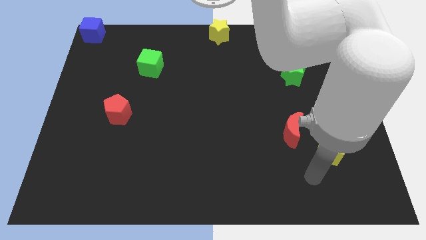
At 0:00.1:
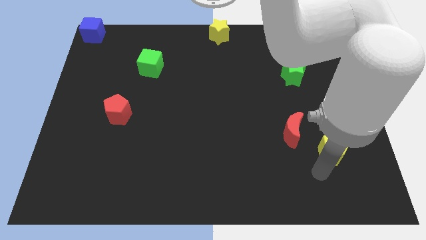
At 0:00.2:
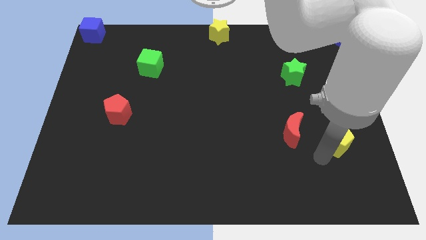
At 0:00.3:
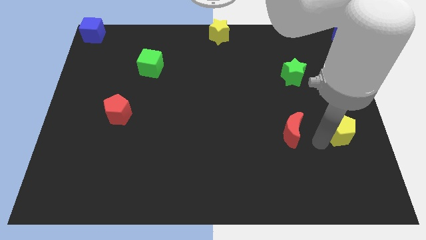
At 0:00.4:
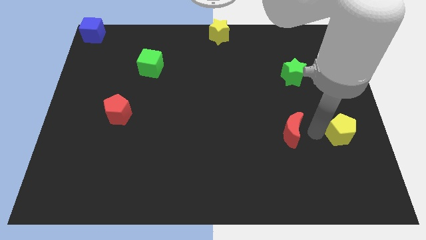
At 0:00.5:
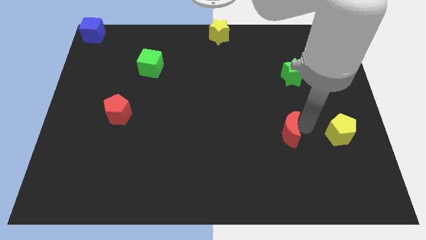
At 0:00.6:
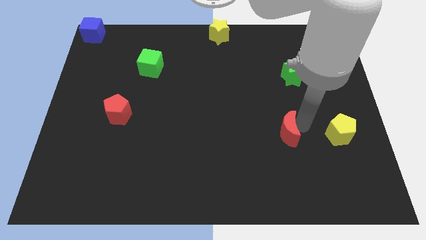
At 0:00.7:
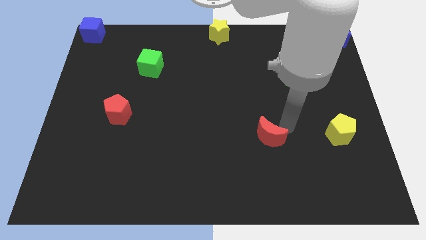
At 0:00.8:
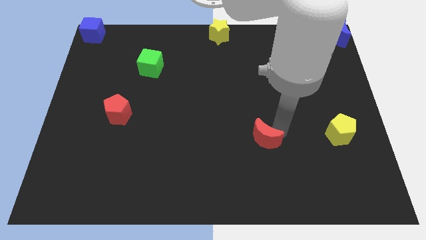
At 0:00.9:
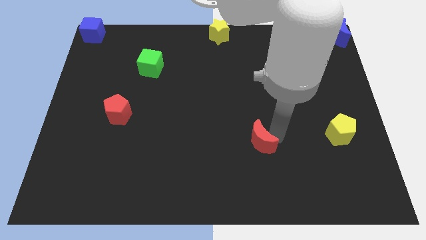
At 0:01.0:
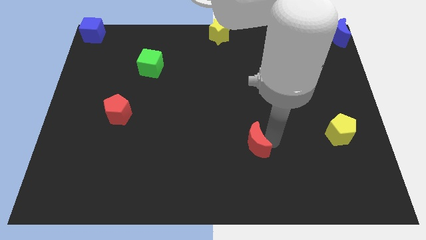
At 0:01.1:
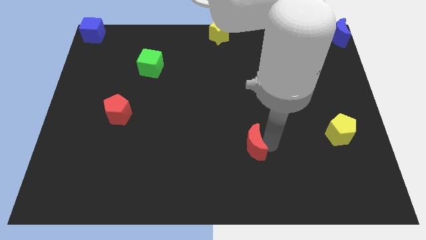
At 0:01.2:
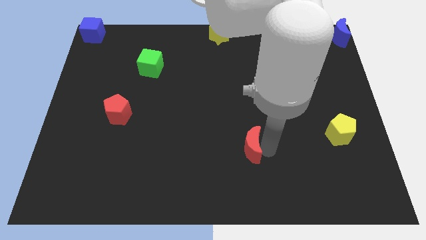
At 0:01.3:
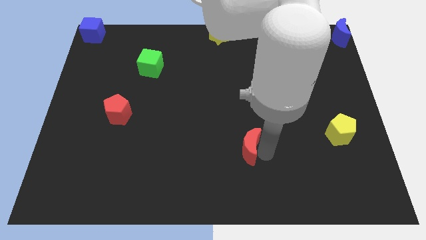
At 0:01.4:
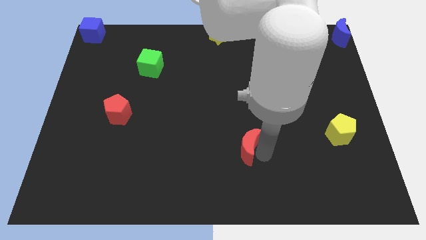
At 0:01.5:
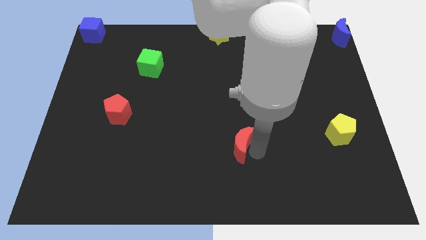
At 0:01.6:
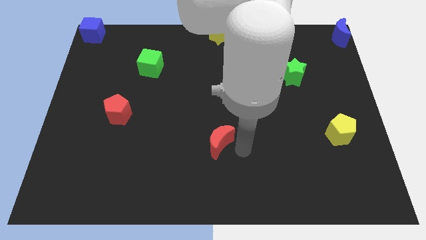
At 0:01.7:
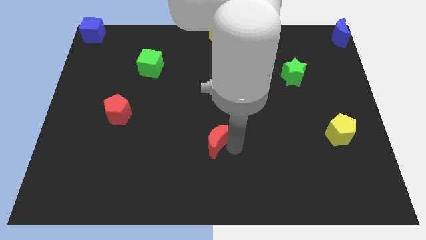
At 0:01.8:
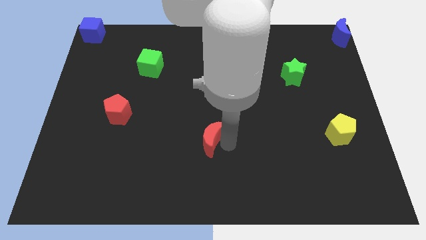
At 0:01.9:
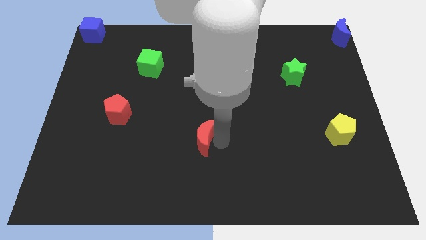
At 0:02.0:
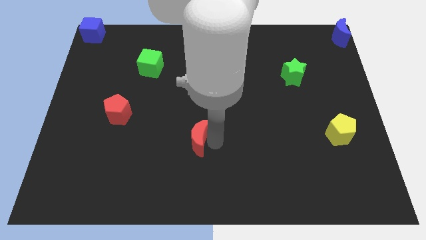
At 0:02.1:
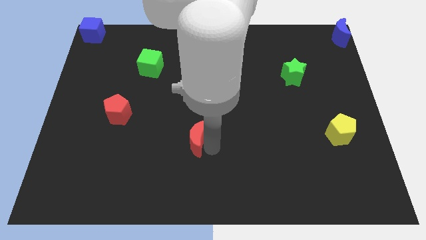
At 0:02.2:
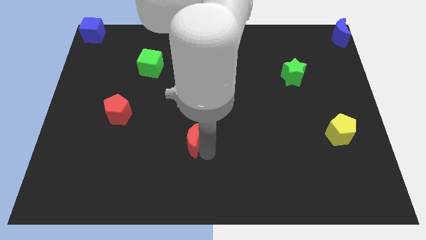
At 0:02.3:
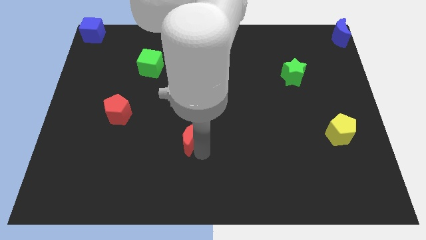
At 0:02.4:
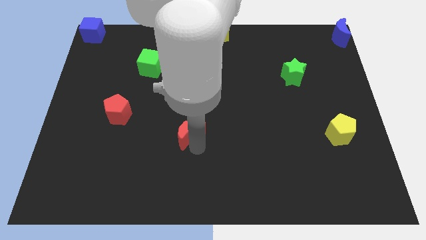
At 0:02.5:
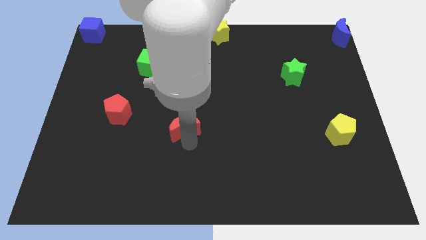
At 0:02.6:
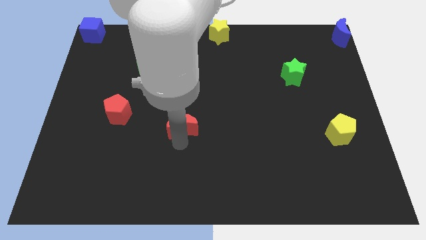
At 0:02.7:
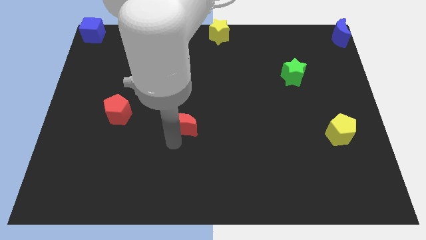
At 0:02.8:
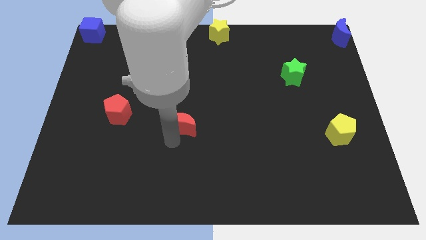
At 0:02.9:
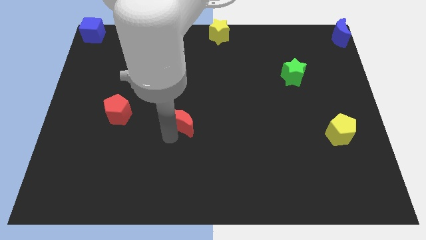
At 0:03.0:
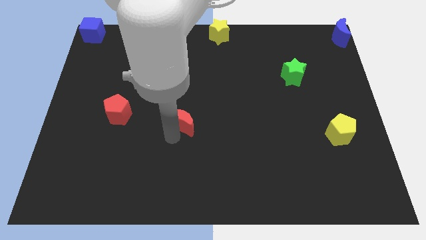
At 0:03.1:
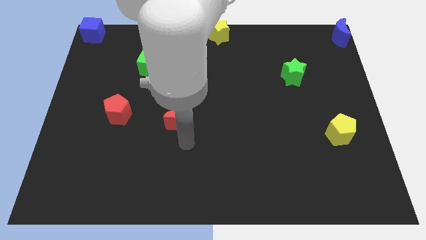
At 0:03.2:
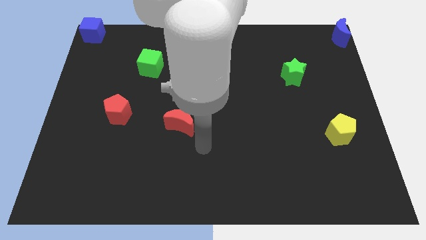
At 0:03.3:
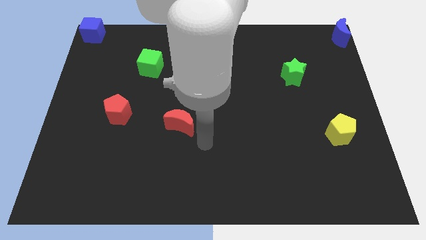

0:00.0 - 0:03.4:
push the red moon towards the red pentagon

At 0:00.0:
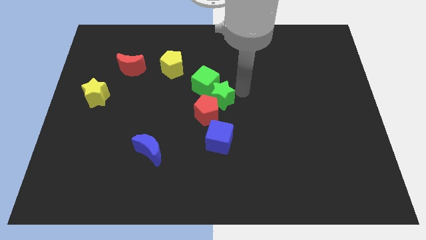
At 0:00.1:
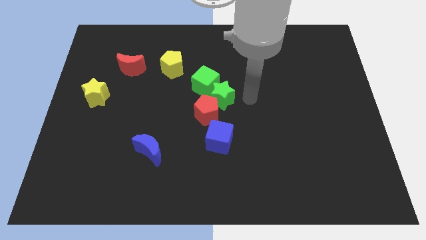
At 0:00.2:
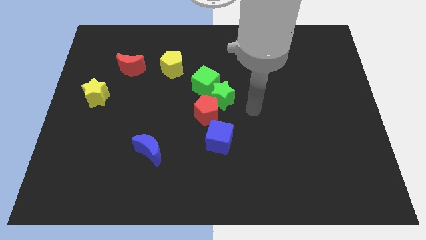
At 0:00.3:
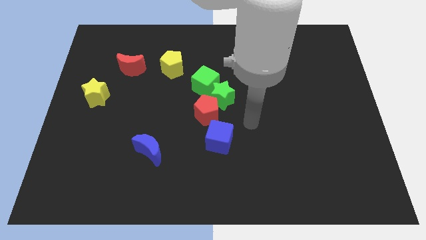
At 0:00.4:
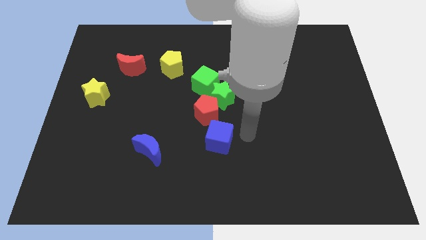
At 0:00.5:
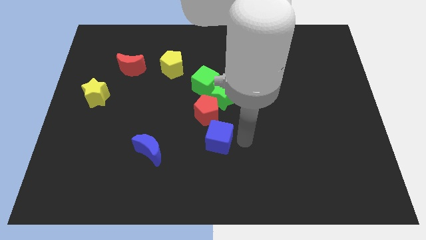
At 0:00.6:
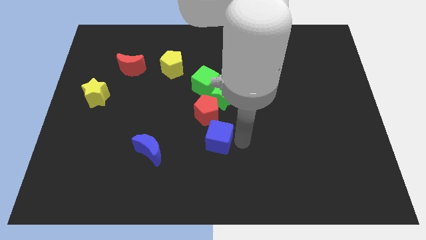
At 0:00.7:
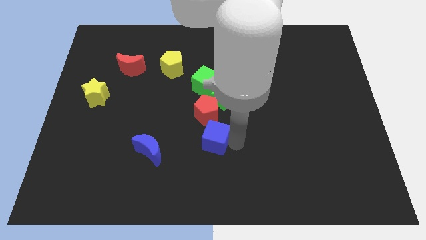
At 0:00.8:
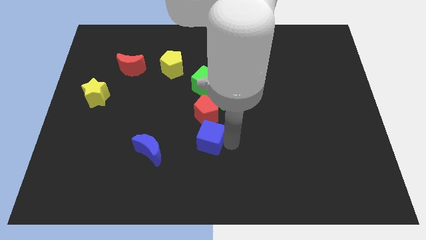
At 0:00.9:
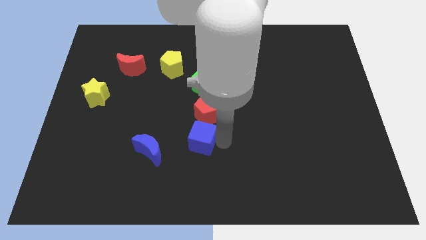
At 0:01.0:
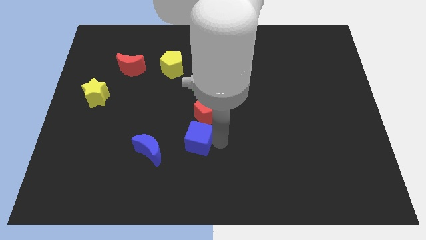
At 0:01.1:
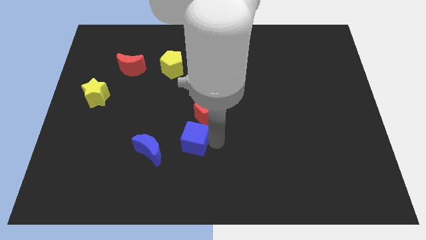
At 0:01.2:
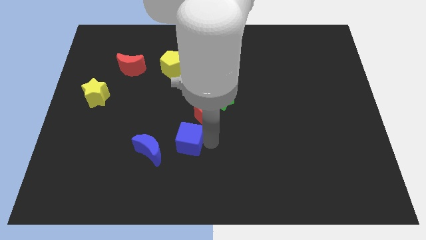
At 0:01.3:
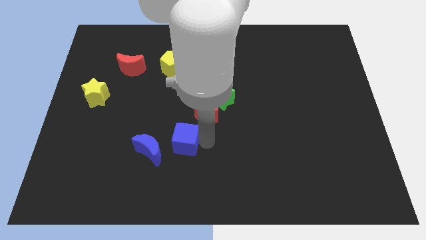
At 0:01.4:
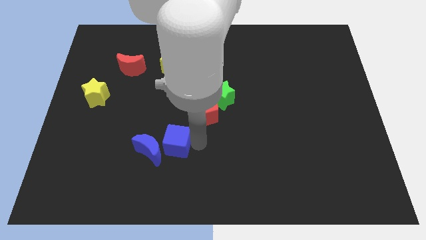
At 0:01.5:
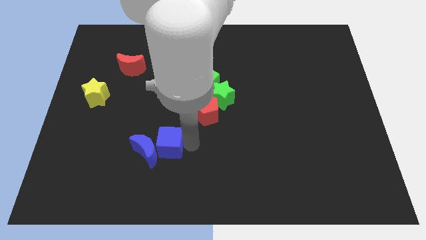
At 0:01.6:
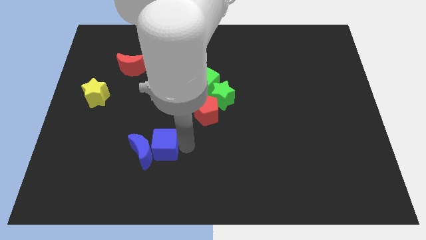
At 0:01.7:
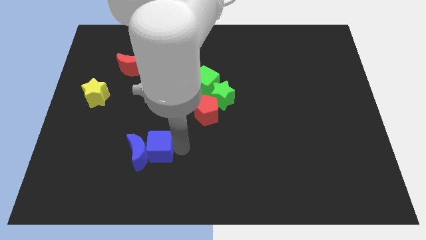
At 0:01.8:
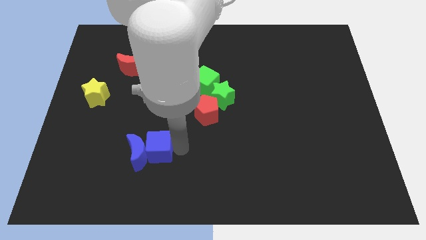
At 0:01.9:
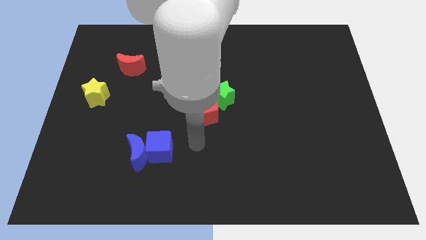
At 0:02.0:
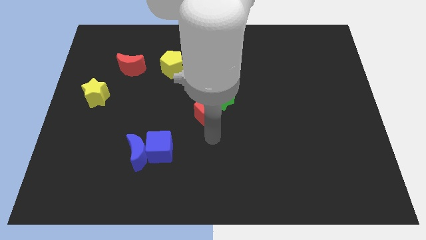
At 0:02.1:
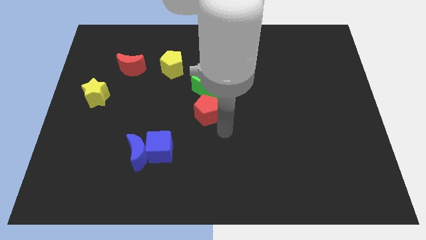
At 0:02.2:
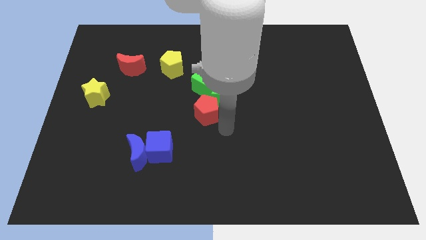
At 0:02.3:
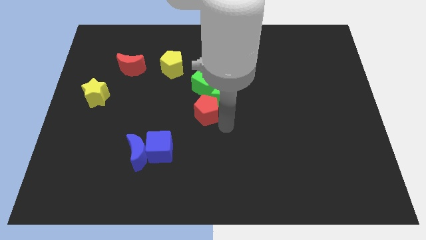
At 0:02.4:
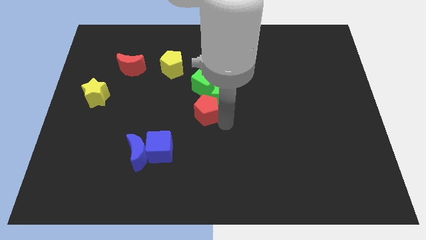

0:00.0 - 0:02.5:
join the blue cube with the blue crescent

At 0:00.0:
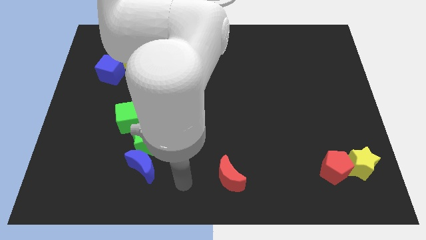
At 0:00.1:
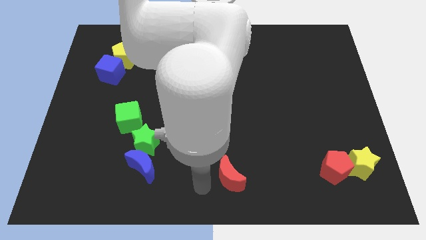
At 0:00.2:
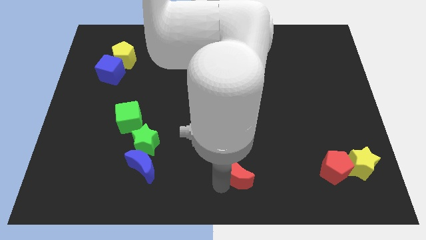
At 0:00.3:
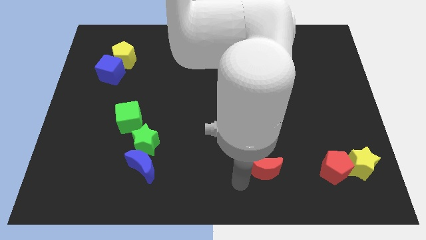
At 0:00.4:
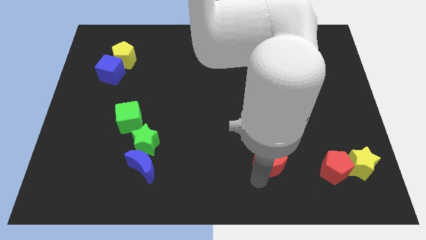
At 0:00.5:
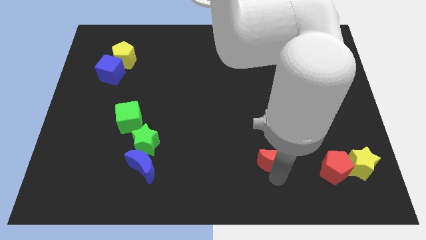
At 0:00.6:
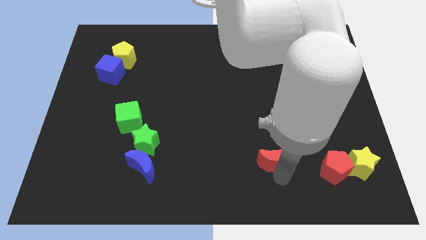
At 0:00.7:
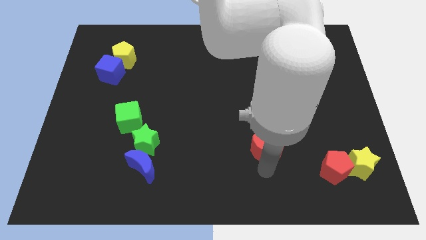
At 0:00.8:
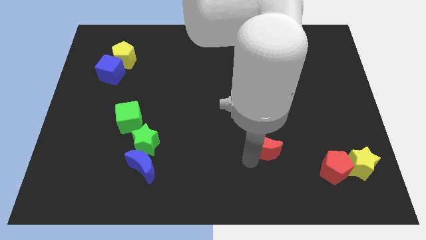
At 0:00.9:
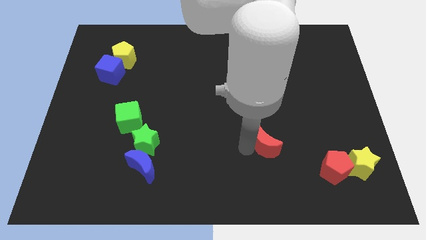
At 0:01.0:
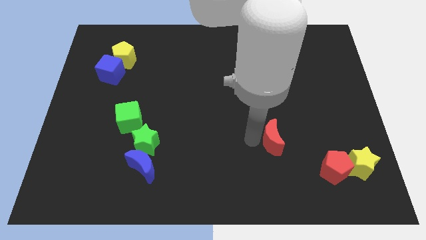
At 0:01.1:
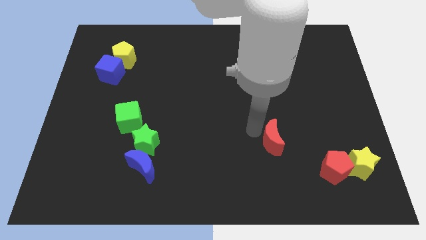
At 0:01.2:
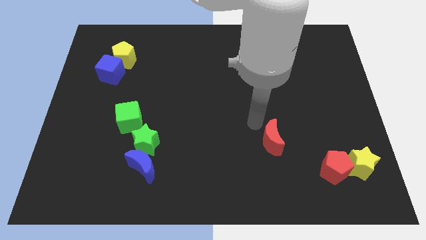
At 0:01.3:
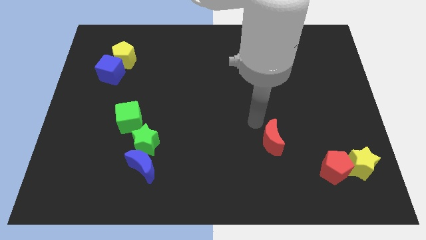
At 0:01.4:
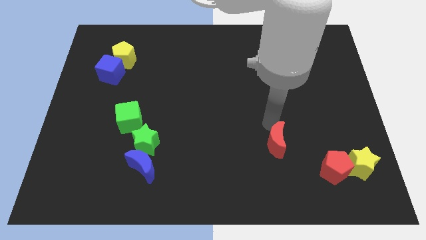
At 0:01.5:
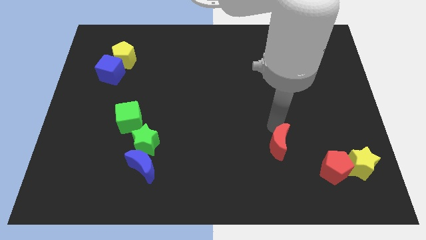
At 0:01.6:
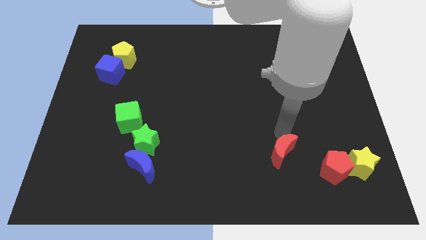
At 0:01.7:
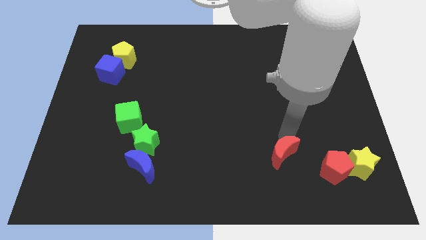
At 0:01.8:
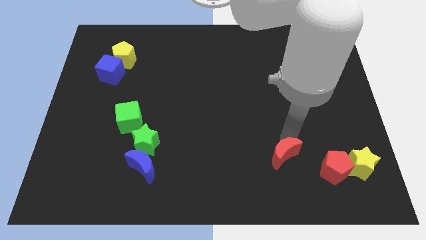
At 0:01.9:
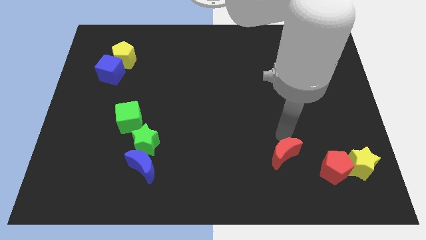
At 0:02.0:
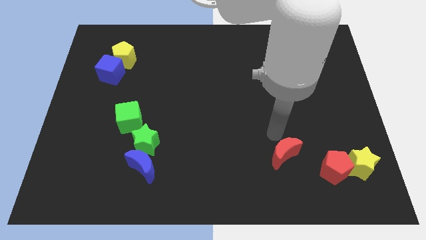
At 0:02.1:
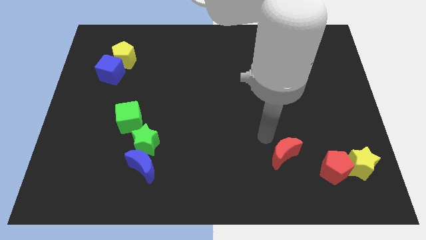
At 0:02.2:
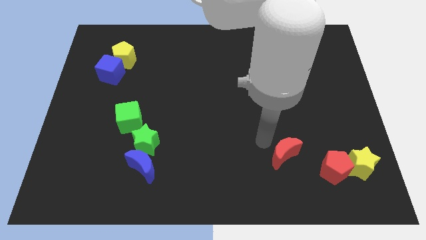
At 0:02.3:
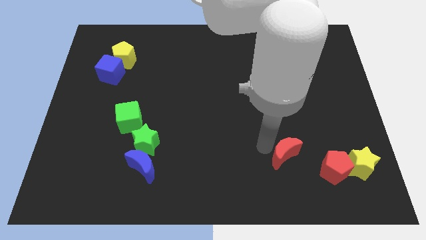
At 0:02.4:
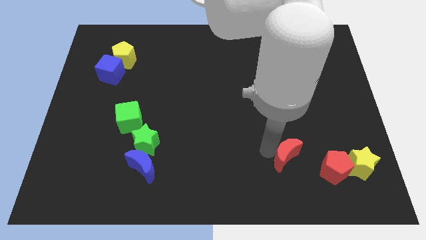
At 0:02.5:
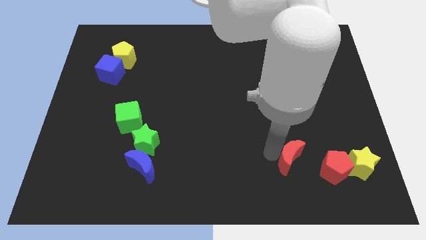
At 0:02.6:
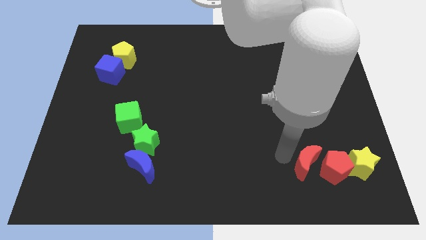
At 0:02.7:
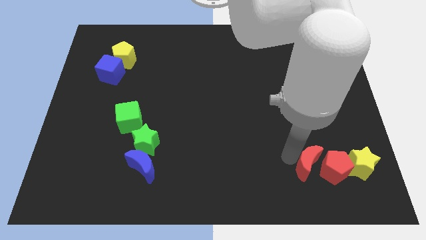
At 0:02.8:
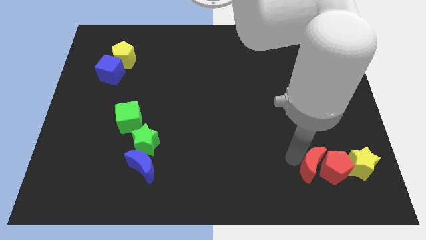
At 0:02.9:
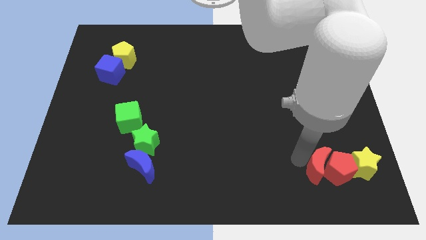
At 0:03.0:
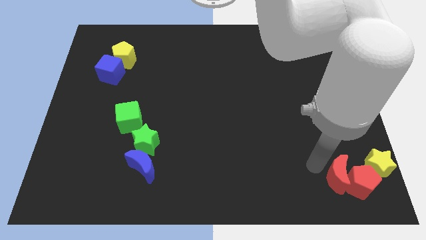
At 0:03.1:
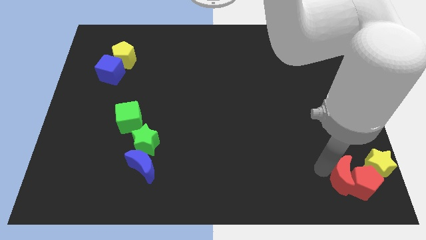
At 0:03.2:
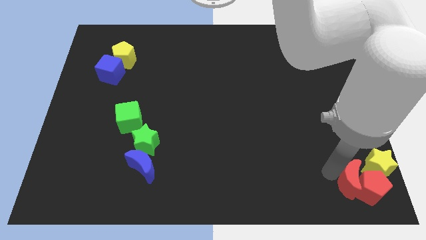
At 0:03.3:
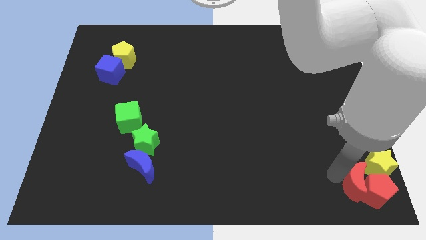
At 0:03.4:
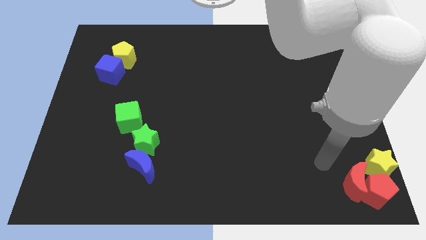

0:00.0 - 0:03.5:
slide the red crescent to the left side of the red pentagon
